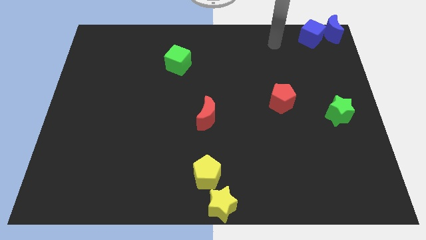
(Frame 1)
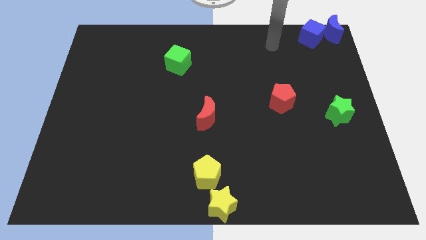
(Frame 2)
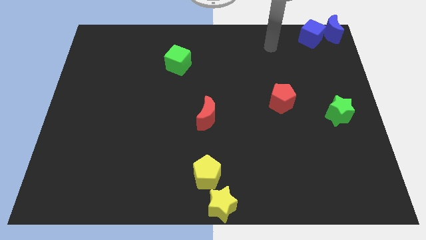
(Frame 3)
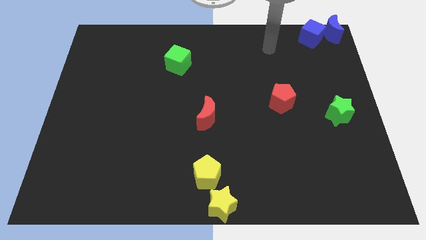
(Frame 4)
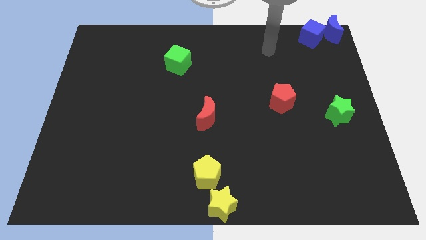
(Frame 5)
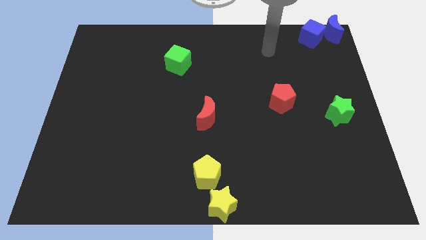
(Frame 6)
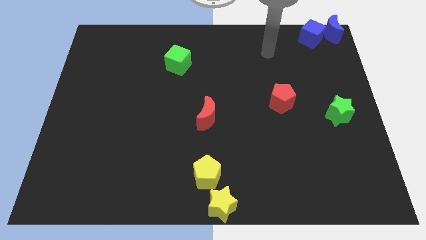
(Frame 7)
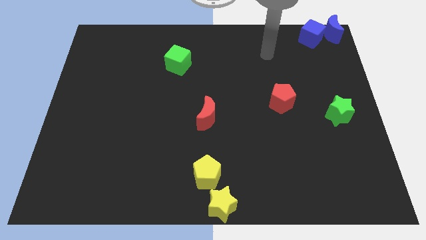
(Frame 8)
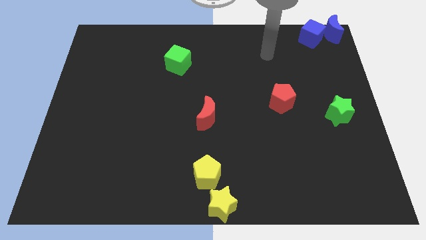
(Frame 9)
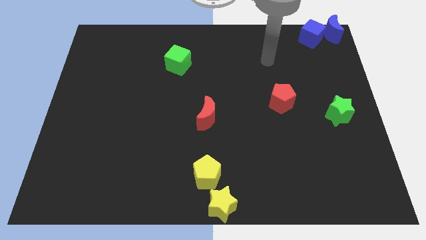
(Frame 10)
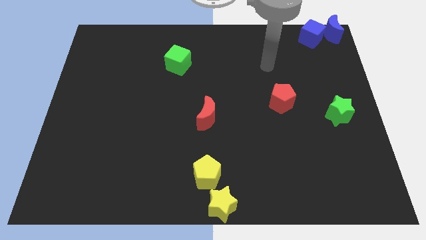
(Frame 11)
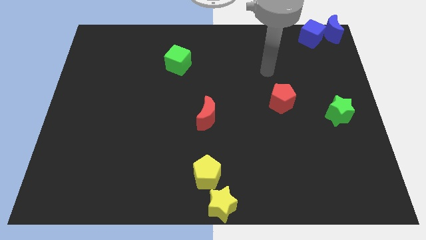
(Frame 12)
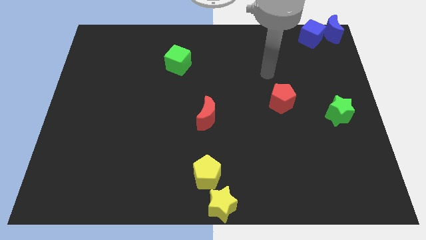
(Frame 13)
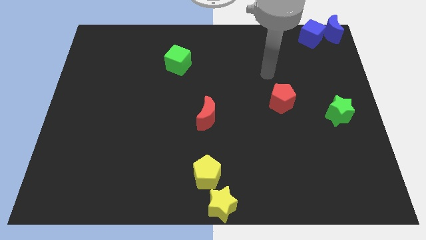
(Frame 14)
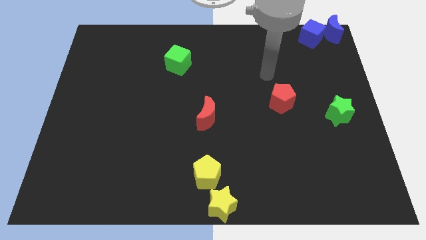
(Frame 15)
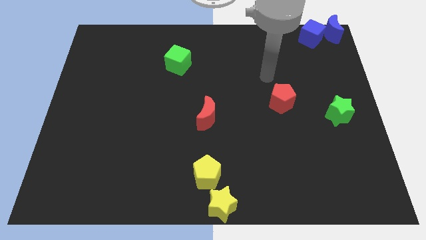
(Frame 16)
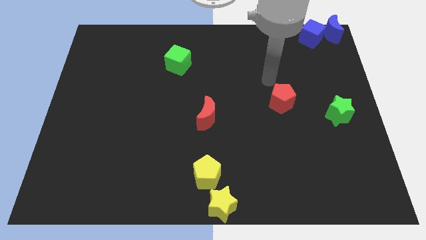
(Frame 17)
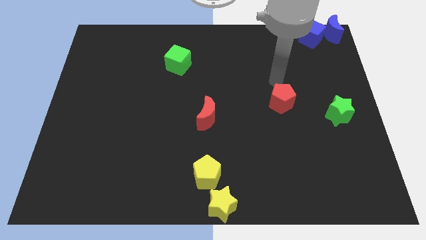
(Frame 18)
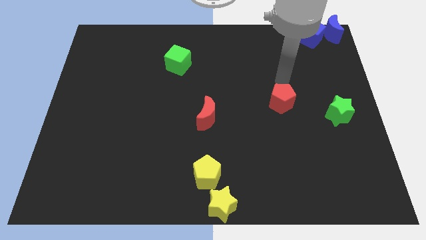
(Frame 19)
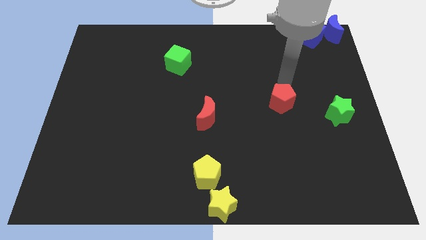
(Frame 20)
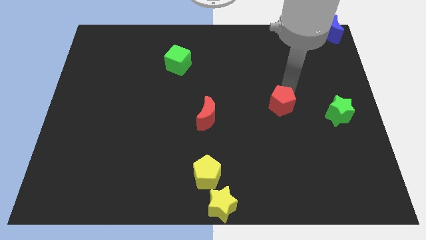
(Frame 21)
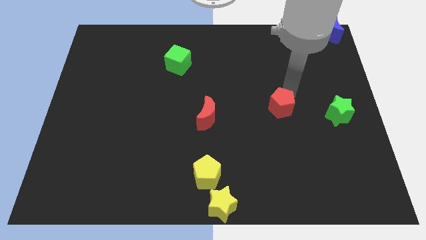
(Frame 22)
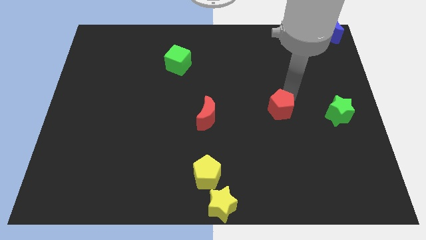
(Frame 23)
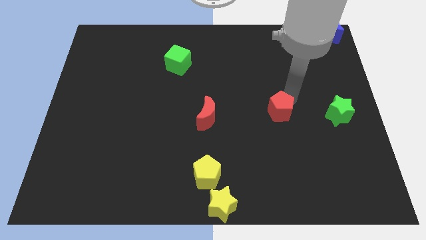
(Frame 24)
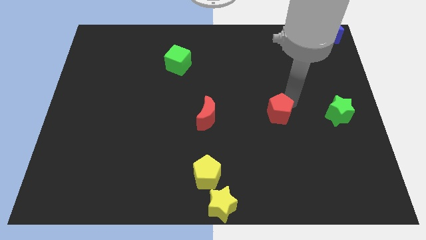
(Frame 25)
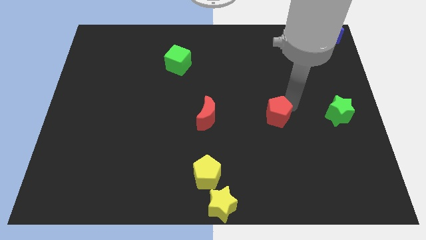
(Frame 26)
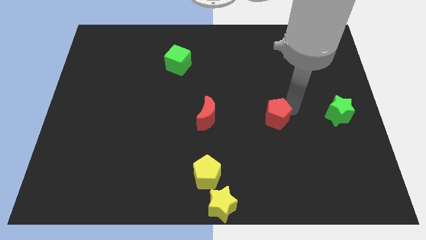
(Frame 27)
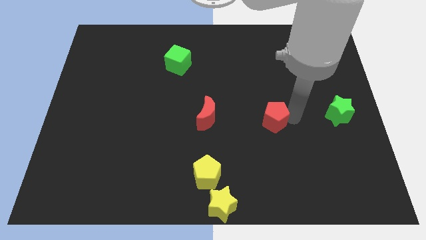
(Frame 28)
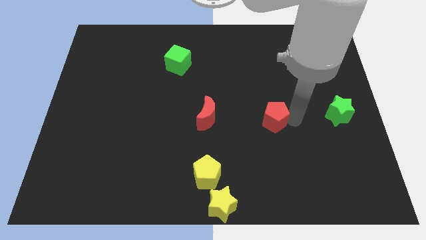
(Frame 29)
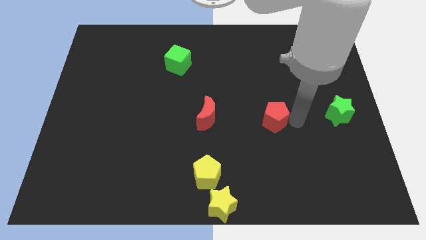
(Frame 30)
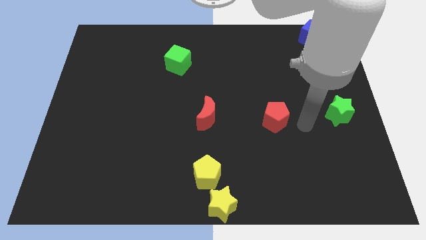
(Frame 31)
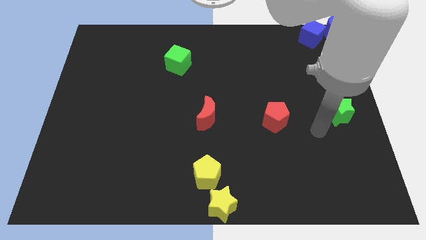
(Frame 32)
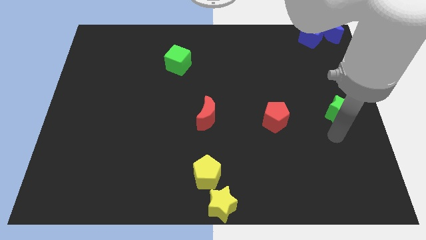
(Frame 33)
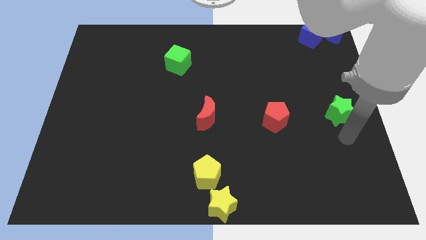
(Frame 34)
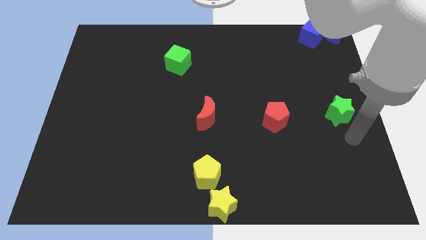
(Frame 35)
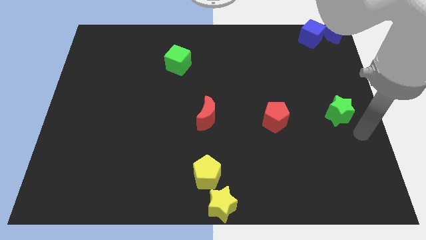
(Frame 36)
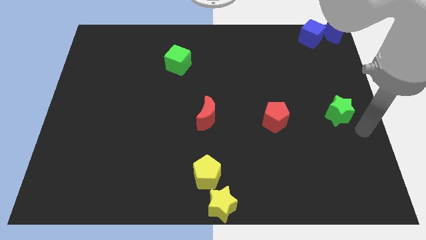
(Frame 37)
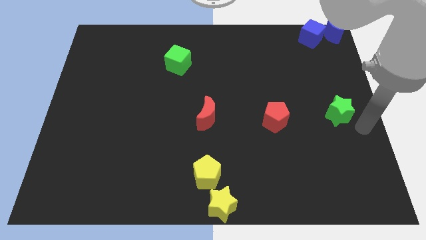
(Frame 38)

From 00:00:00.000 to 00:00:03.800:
place the red pentagon in between red moon and green star

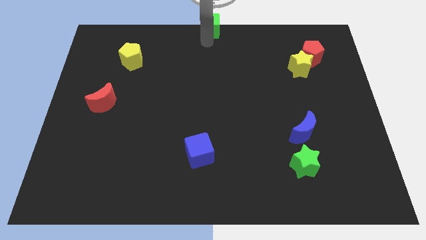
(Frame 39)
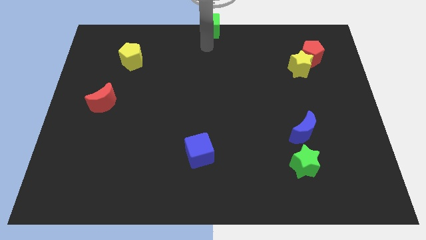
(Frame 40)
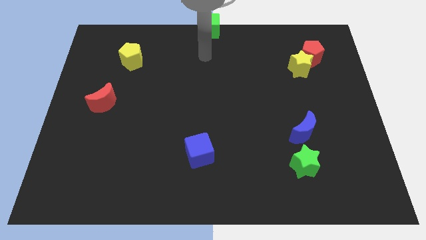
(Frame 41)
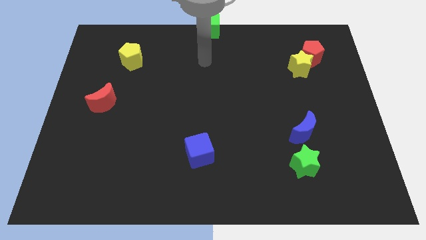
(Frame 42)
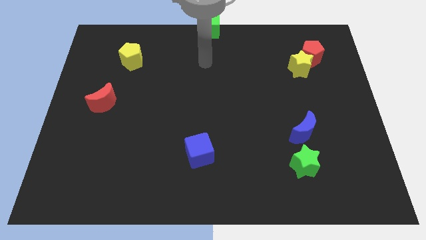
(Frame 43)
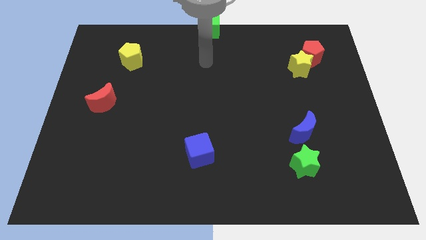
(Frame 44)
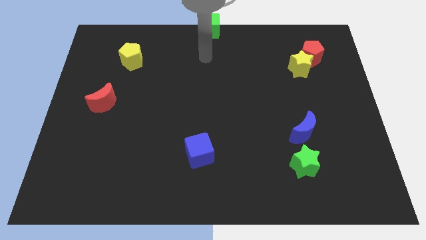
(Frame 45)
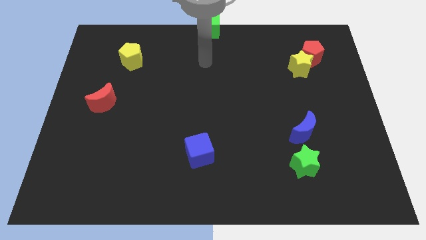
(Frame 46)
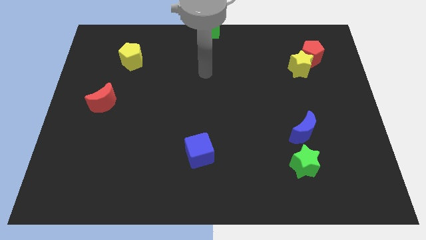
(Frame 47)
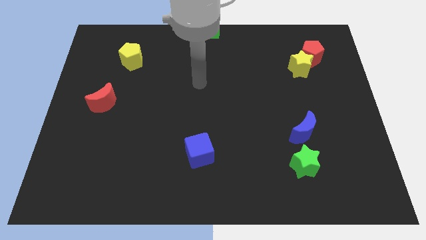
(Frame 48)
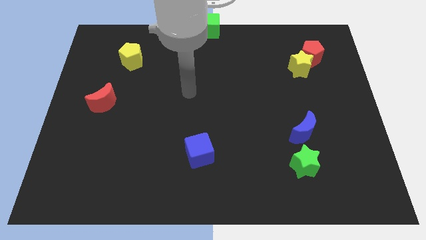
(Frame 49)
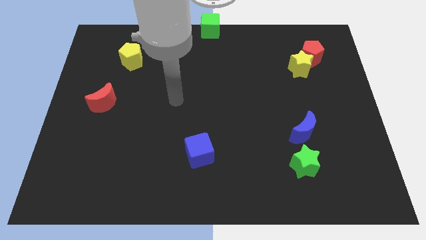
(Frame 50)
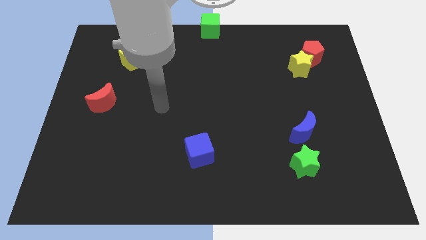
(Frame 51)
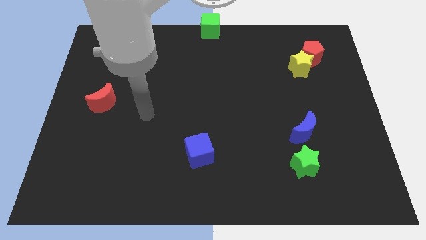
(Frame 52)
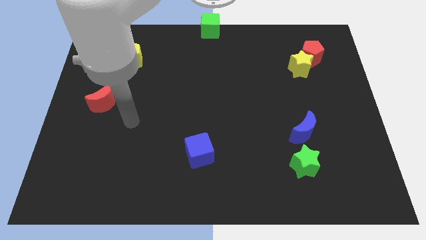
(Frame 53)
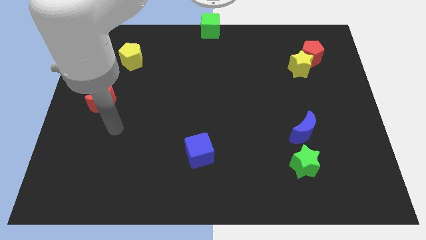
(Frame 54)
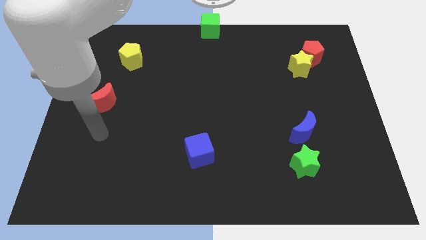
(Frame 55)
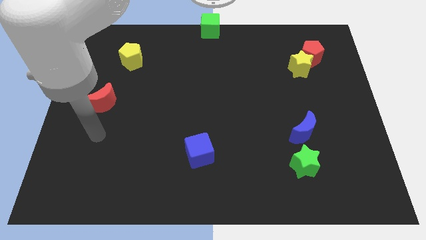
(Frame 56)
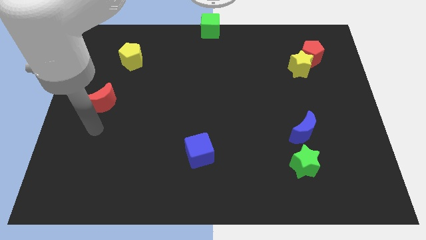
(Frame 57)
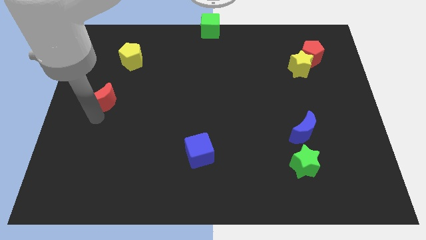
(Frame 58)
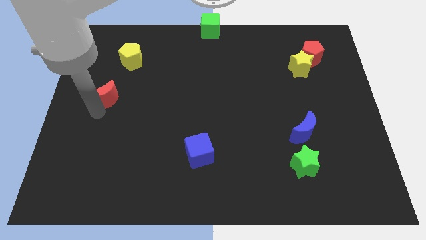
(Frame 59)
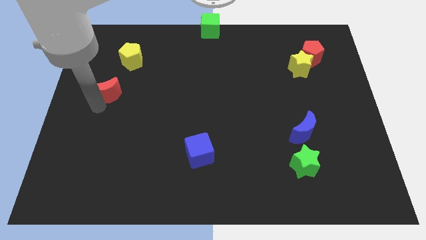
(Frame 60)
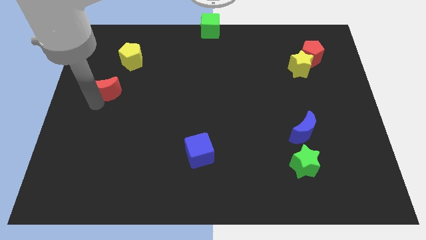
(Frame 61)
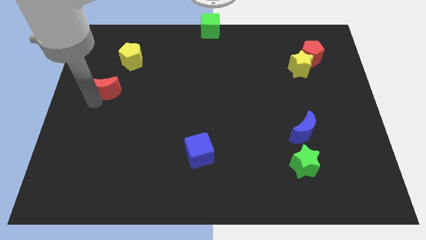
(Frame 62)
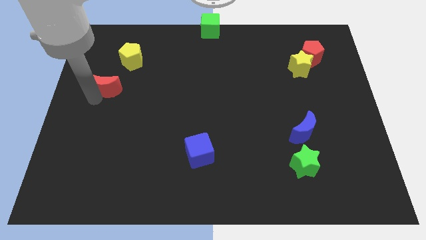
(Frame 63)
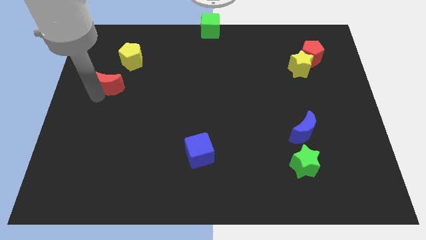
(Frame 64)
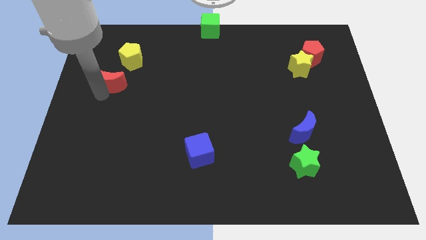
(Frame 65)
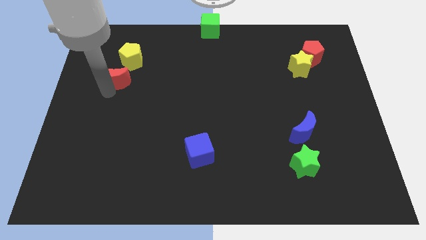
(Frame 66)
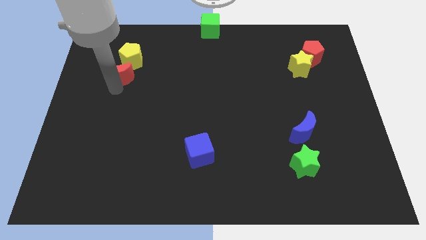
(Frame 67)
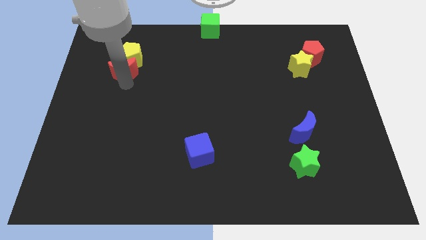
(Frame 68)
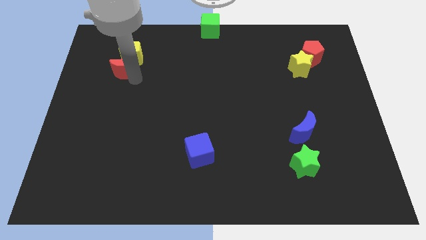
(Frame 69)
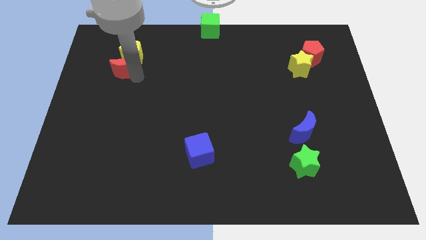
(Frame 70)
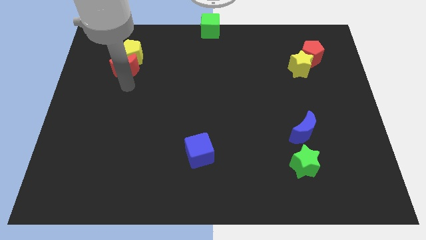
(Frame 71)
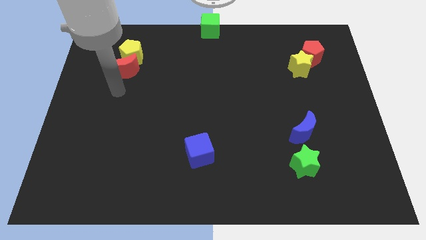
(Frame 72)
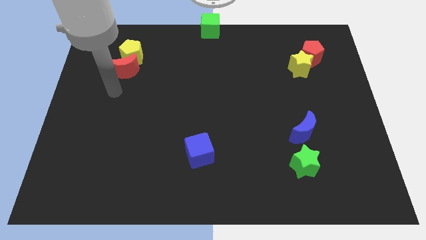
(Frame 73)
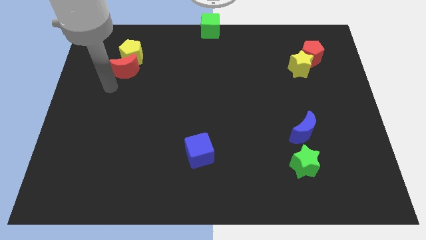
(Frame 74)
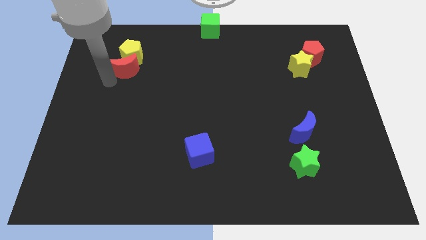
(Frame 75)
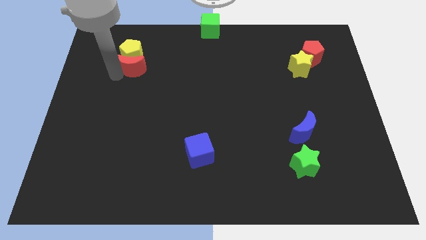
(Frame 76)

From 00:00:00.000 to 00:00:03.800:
push the red crescent into the yellow pentagon

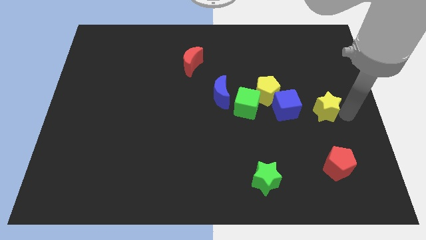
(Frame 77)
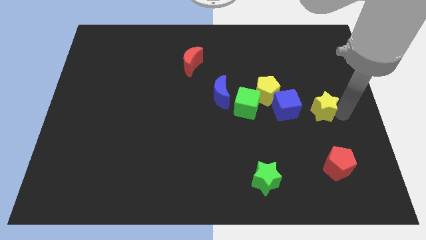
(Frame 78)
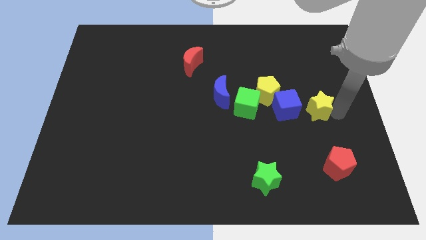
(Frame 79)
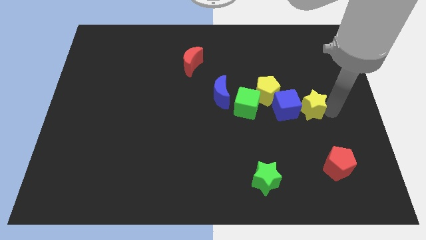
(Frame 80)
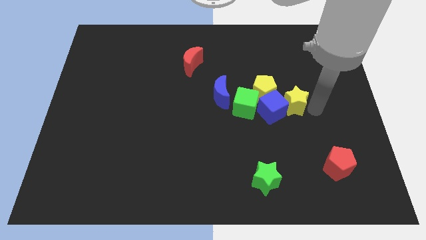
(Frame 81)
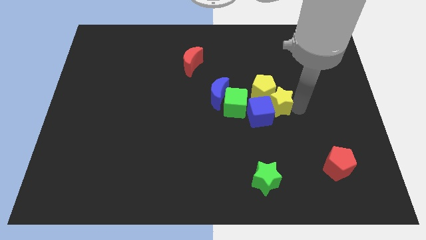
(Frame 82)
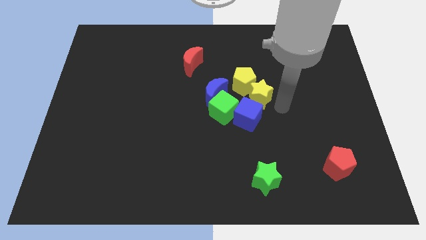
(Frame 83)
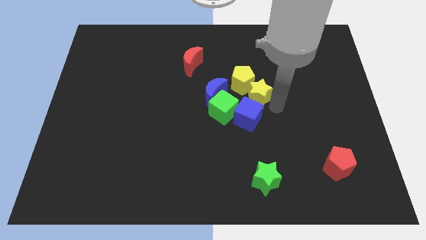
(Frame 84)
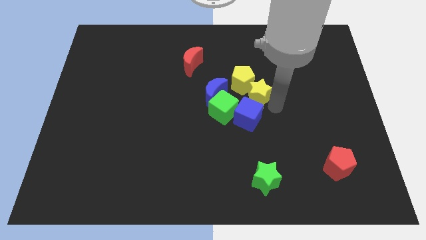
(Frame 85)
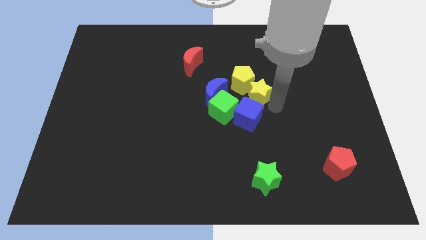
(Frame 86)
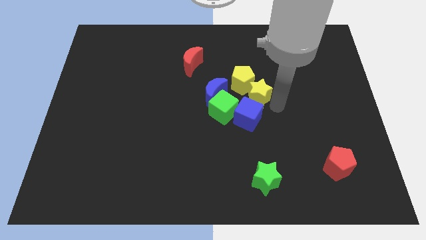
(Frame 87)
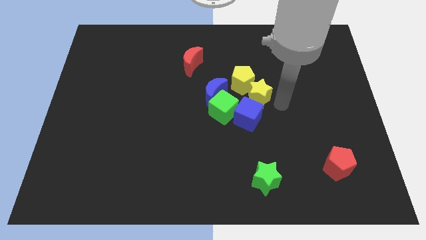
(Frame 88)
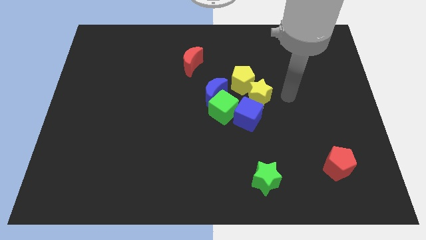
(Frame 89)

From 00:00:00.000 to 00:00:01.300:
move the yellow star to the top of the blue cube
